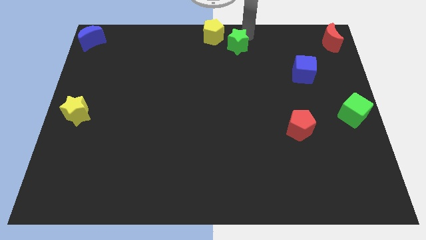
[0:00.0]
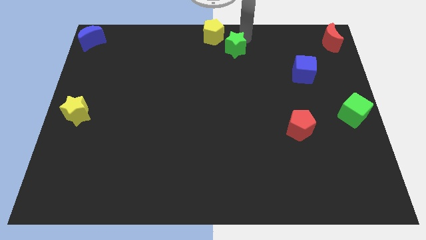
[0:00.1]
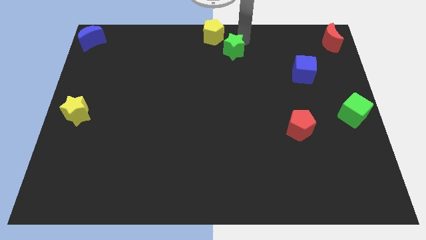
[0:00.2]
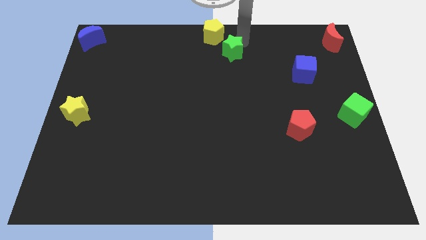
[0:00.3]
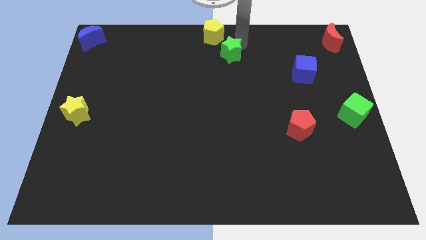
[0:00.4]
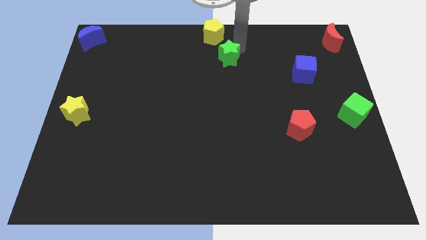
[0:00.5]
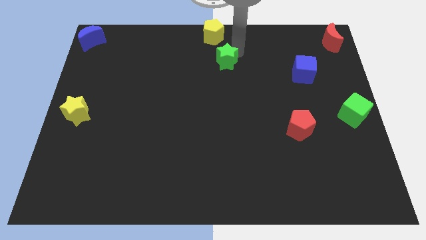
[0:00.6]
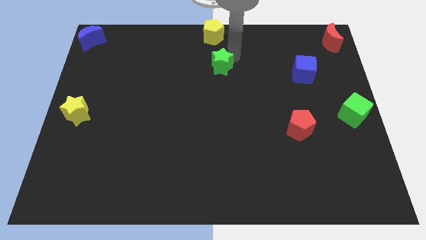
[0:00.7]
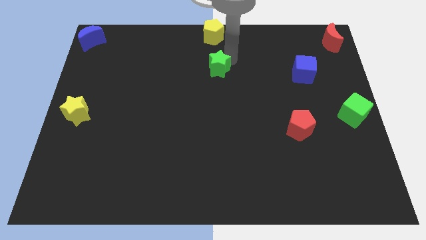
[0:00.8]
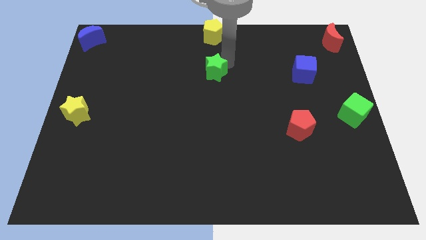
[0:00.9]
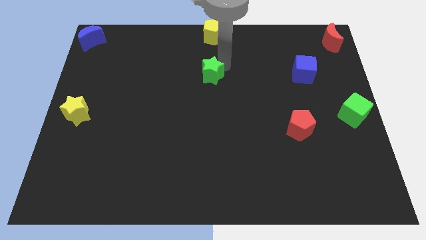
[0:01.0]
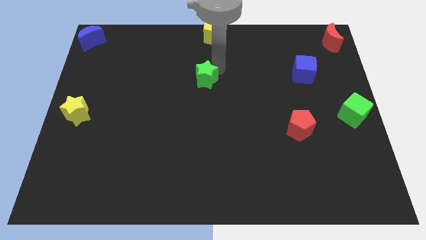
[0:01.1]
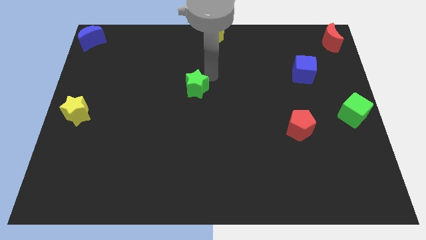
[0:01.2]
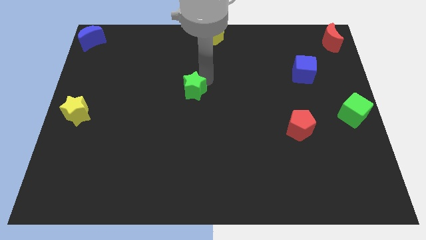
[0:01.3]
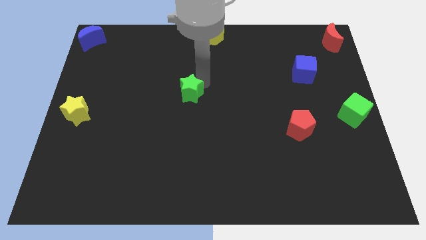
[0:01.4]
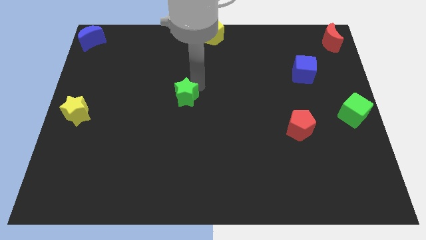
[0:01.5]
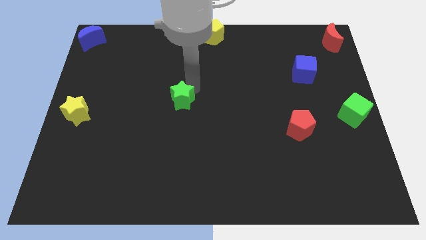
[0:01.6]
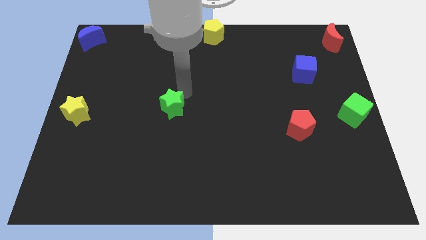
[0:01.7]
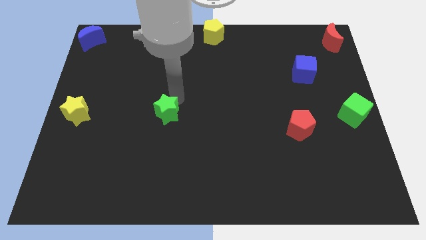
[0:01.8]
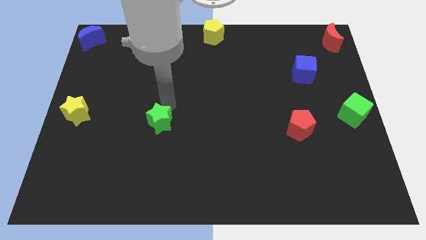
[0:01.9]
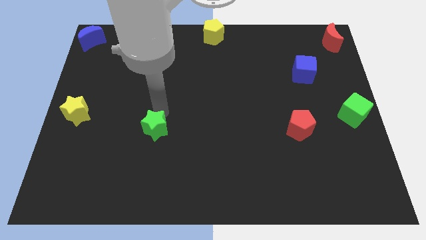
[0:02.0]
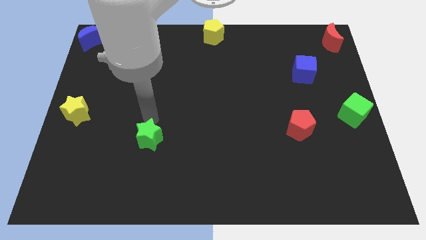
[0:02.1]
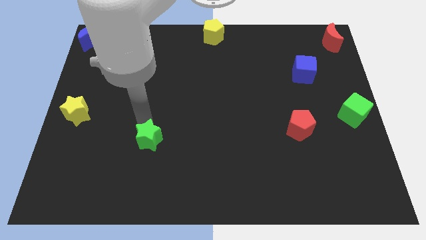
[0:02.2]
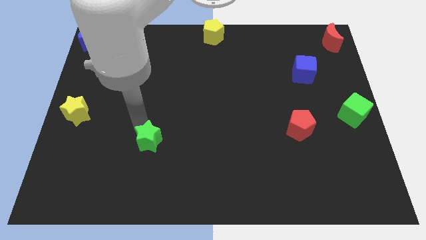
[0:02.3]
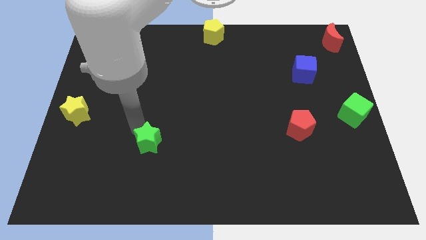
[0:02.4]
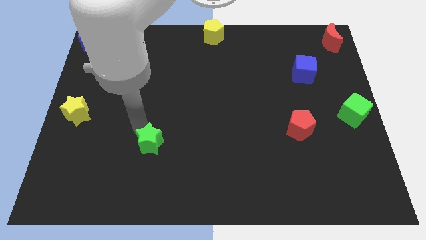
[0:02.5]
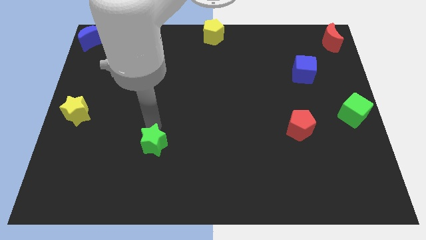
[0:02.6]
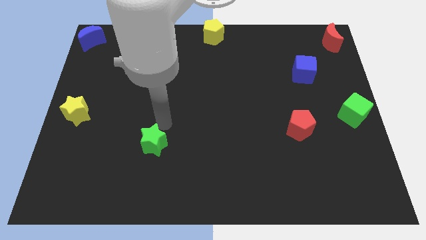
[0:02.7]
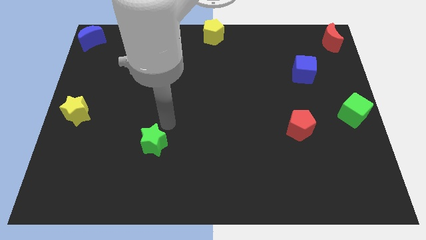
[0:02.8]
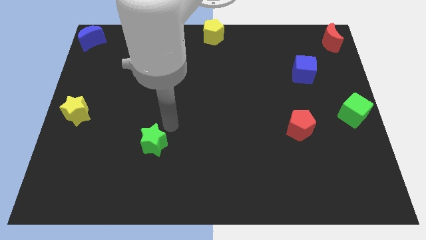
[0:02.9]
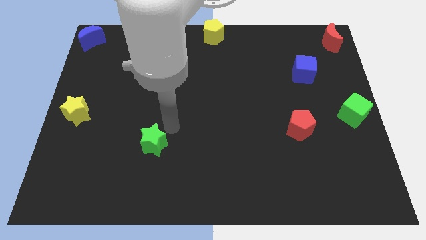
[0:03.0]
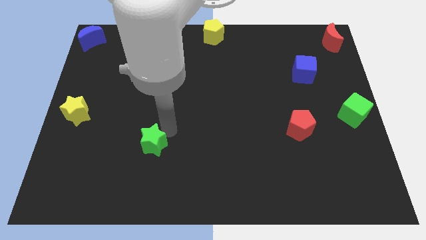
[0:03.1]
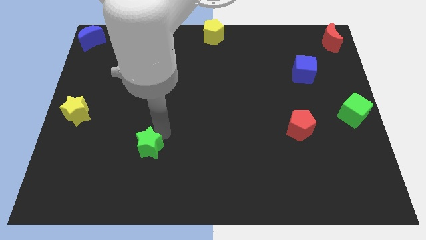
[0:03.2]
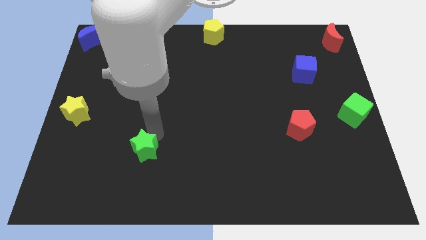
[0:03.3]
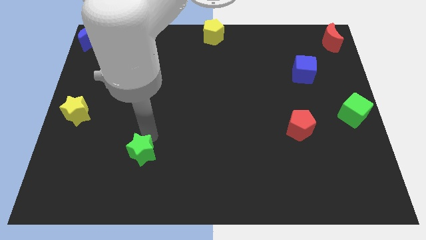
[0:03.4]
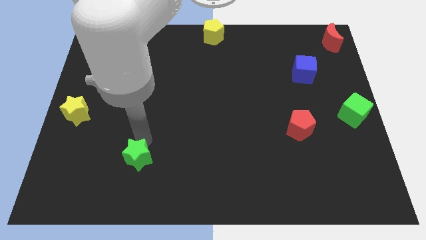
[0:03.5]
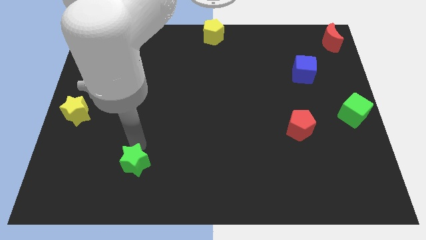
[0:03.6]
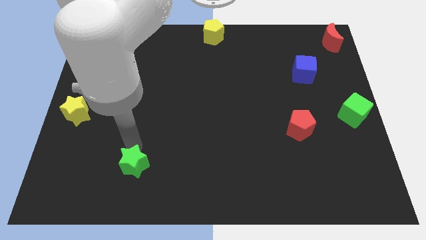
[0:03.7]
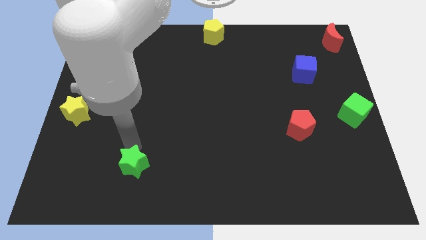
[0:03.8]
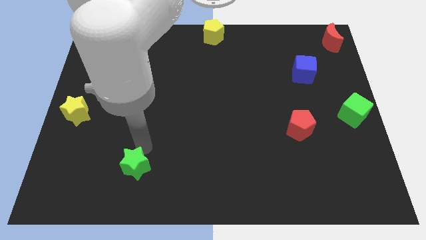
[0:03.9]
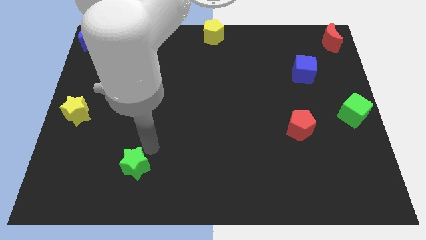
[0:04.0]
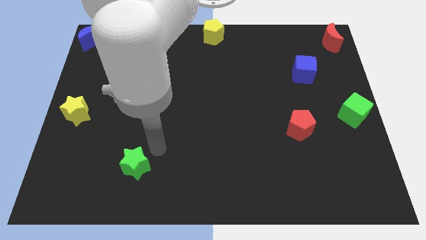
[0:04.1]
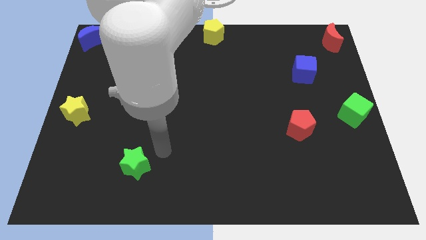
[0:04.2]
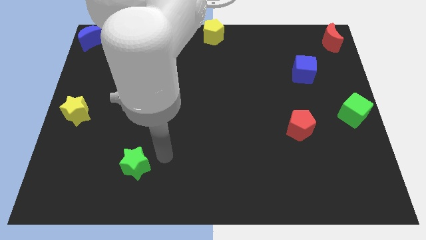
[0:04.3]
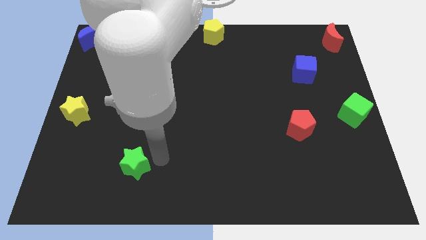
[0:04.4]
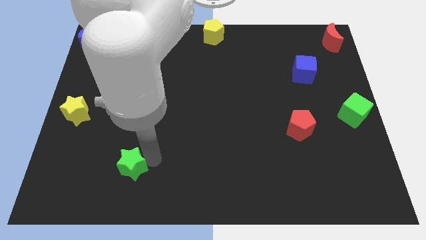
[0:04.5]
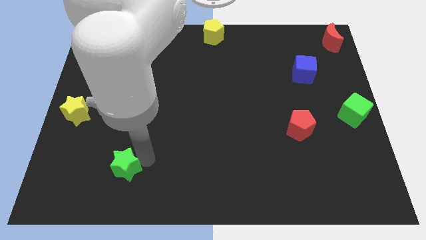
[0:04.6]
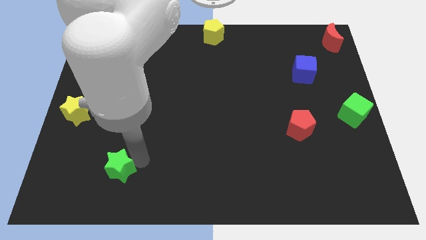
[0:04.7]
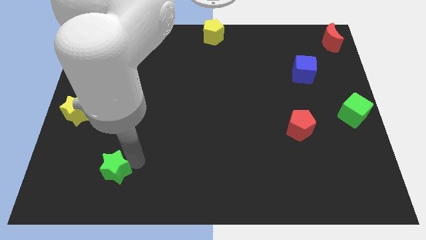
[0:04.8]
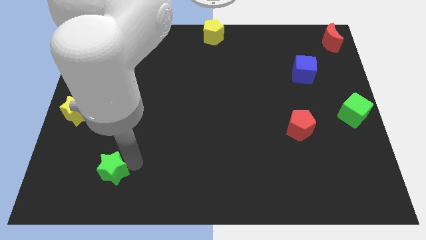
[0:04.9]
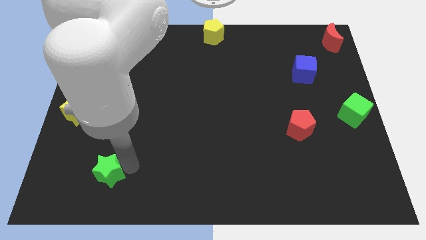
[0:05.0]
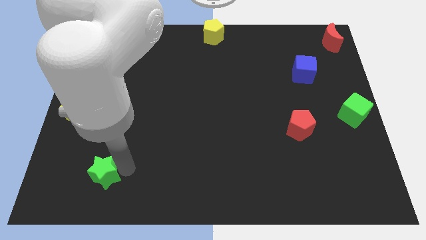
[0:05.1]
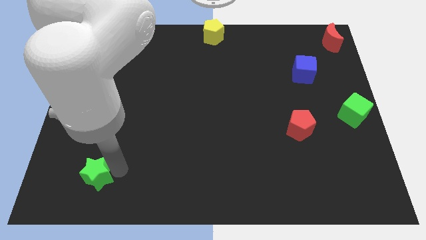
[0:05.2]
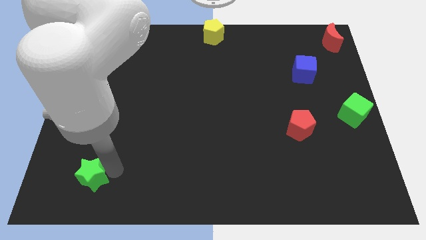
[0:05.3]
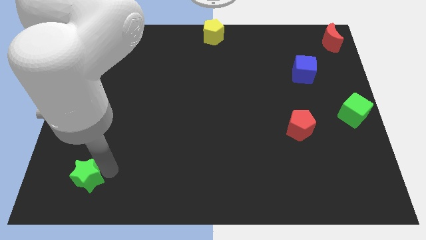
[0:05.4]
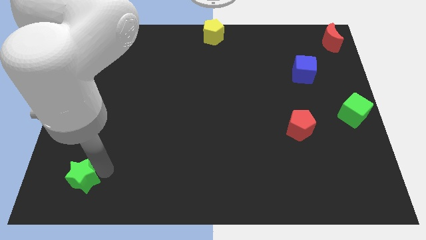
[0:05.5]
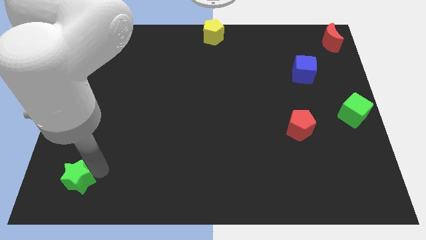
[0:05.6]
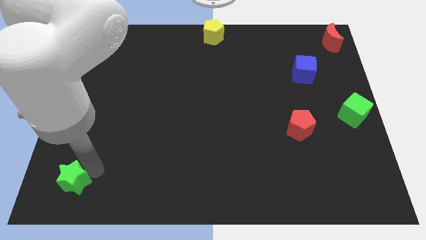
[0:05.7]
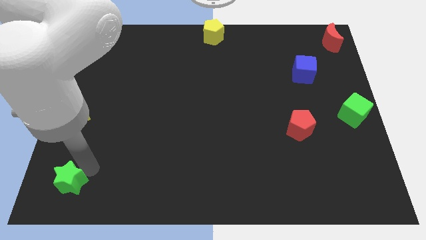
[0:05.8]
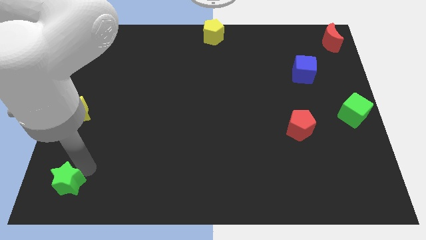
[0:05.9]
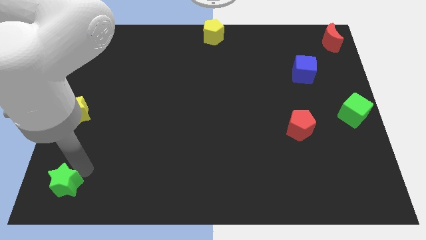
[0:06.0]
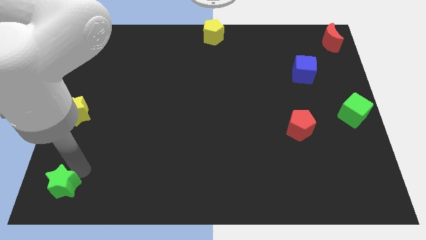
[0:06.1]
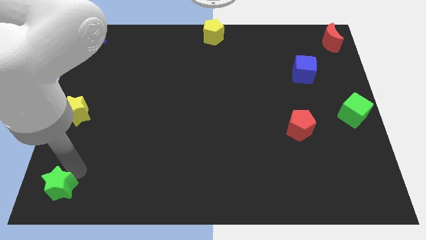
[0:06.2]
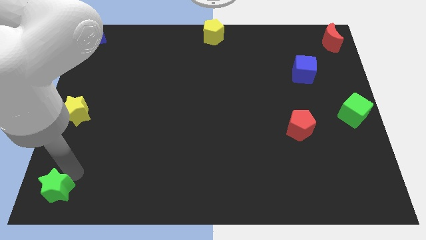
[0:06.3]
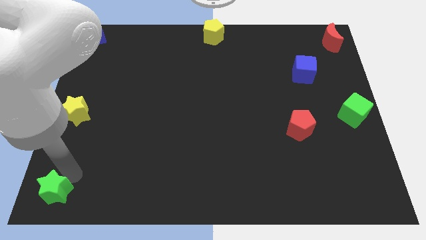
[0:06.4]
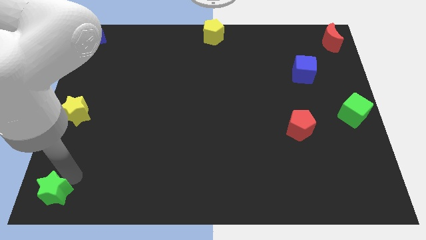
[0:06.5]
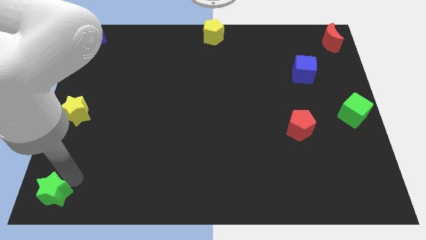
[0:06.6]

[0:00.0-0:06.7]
place green start below yellow star

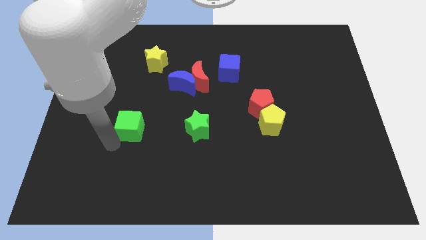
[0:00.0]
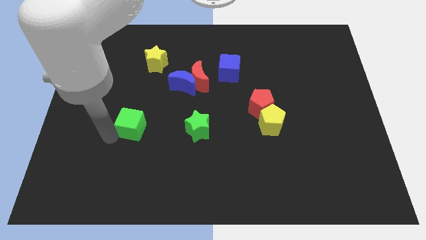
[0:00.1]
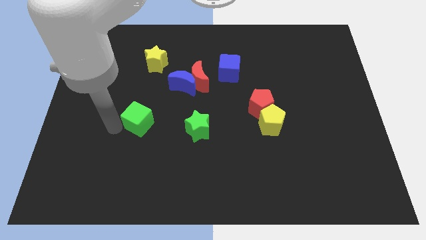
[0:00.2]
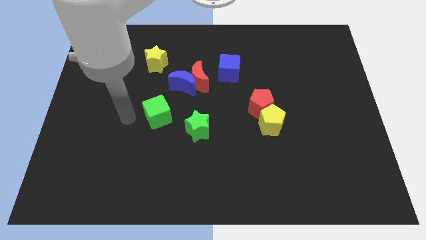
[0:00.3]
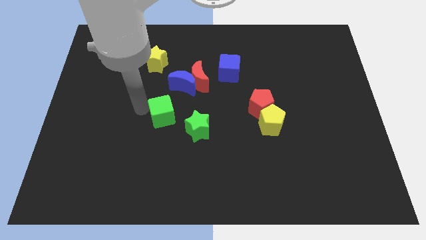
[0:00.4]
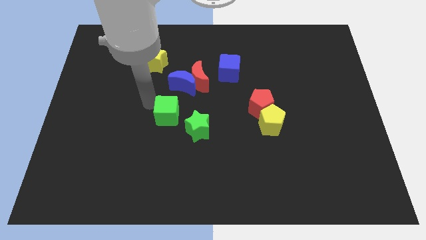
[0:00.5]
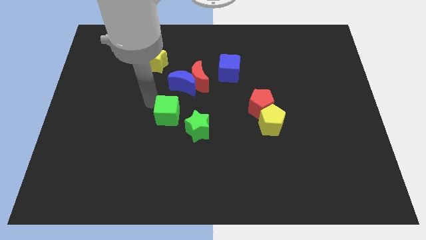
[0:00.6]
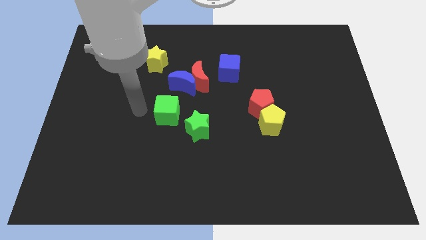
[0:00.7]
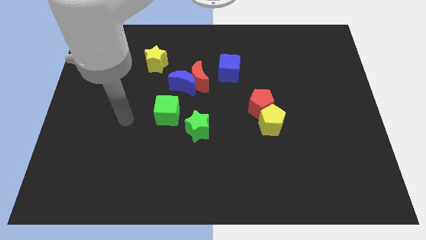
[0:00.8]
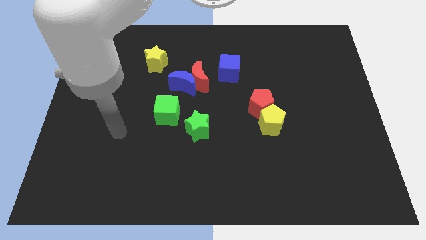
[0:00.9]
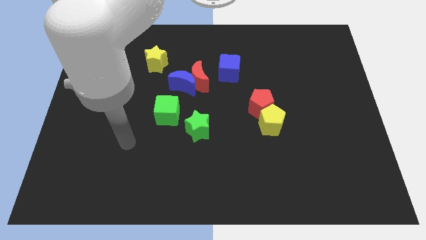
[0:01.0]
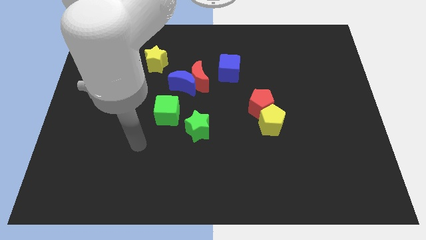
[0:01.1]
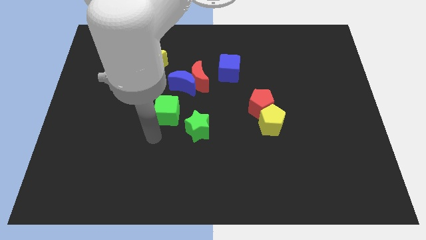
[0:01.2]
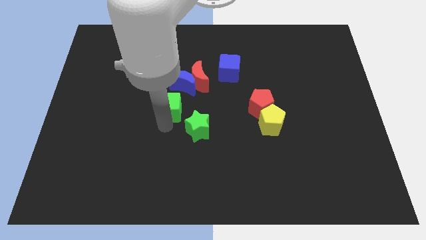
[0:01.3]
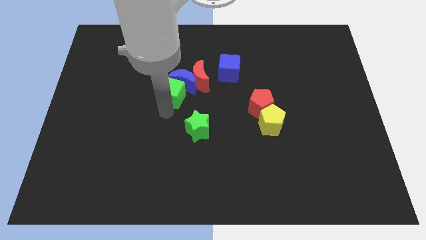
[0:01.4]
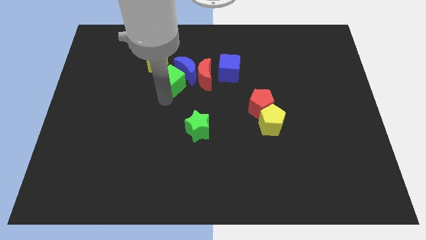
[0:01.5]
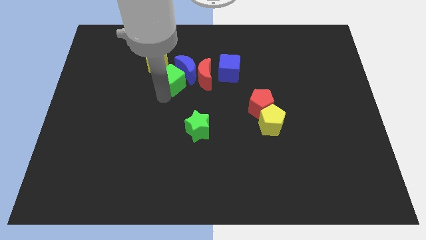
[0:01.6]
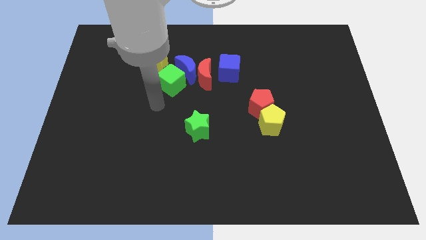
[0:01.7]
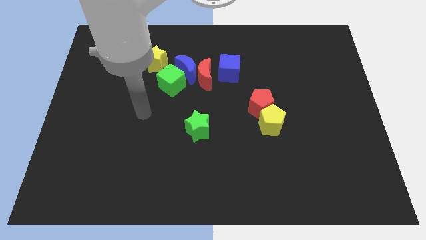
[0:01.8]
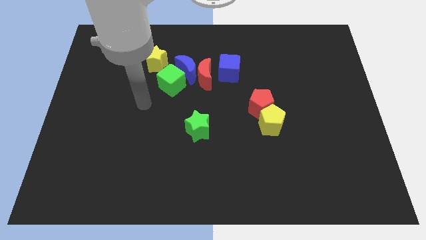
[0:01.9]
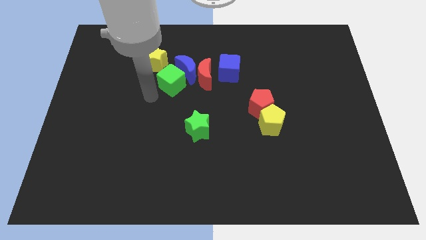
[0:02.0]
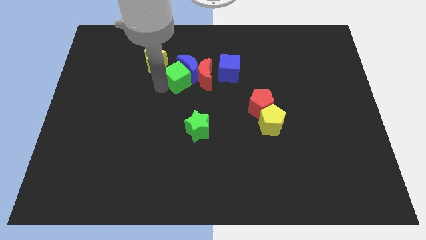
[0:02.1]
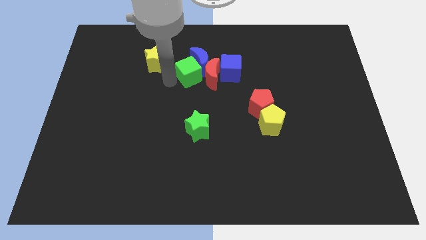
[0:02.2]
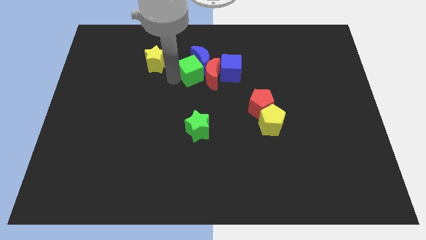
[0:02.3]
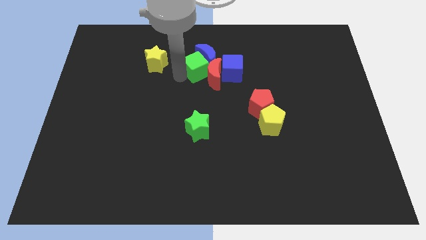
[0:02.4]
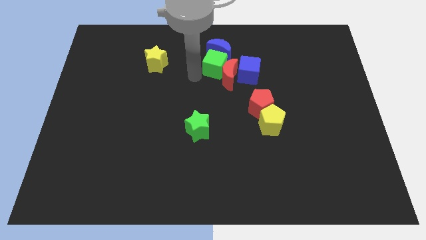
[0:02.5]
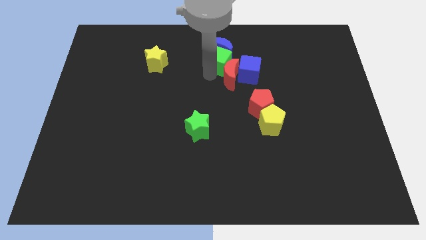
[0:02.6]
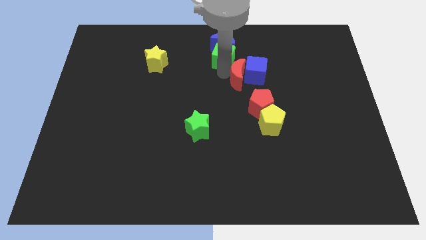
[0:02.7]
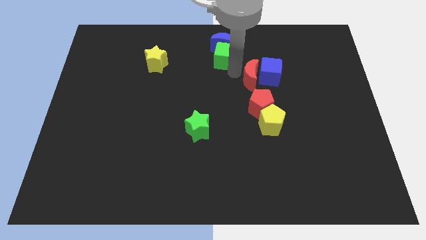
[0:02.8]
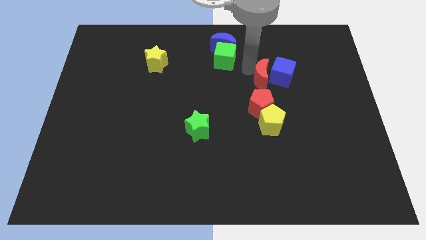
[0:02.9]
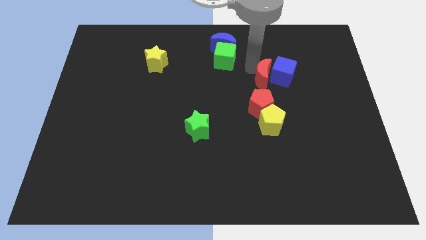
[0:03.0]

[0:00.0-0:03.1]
slide the green cube along with the blue moon towards the top center of the board
